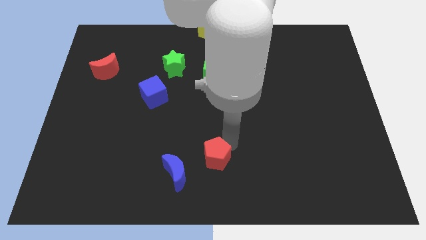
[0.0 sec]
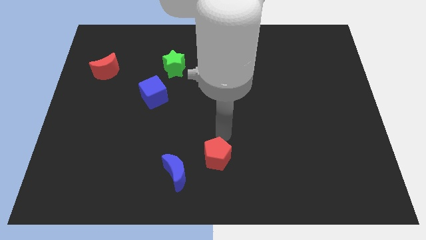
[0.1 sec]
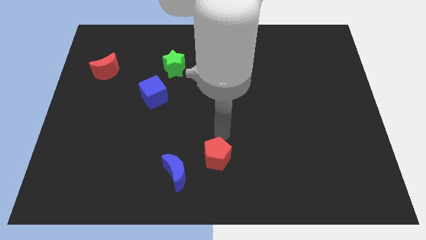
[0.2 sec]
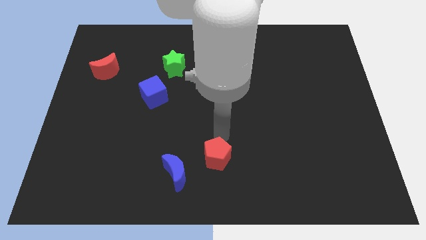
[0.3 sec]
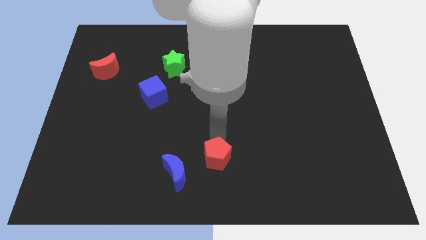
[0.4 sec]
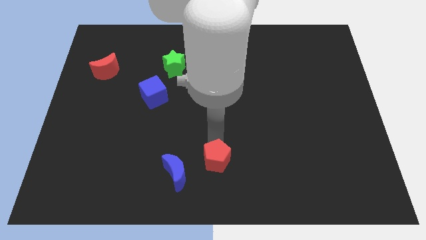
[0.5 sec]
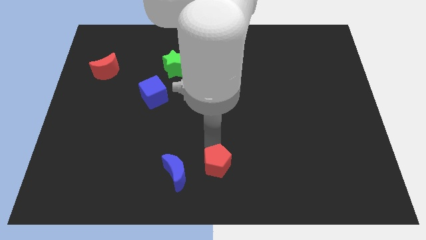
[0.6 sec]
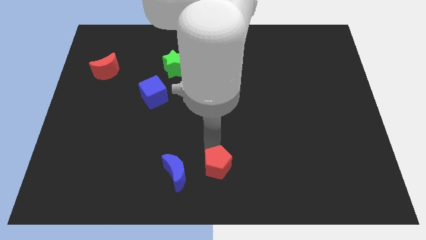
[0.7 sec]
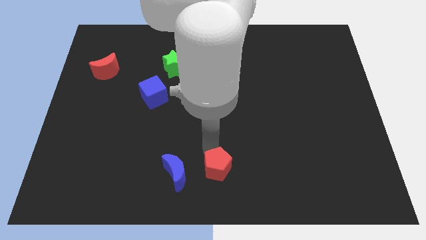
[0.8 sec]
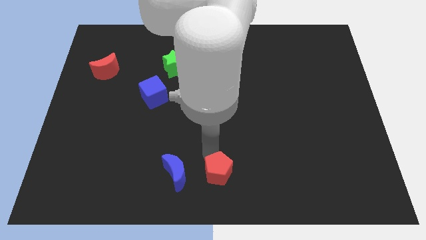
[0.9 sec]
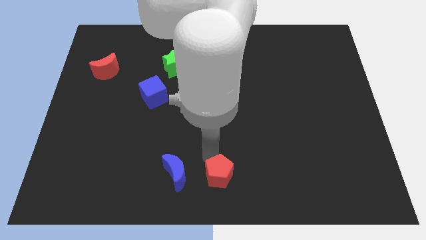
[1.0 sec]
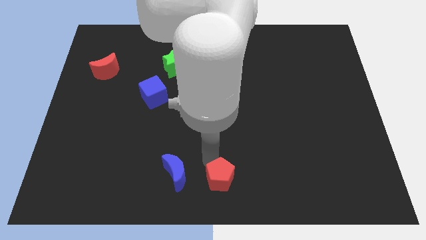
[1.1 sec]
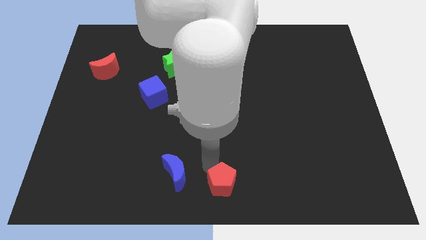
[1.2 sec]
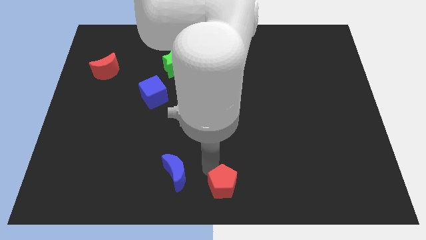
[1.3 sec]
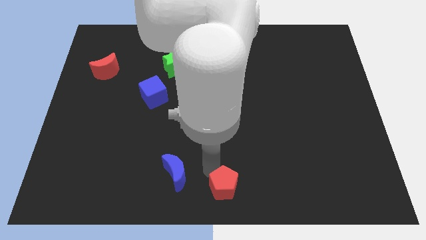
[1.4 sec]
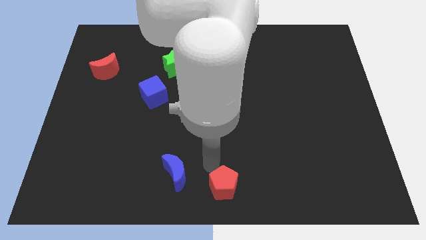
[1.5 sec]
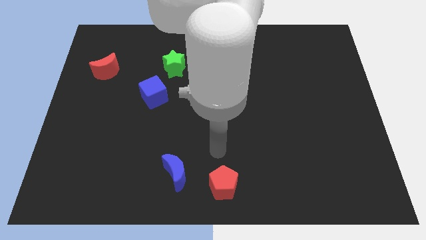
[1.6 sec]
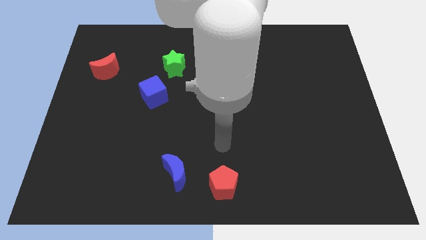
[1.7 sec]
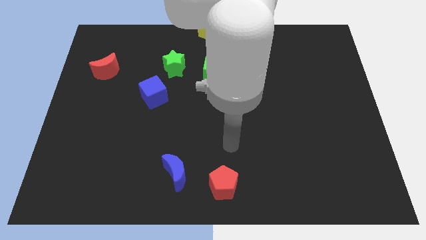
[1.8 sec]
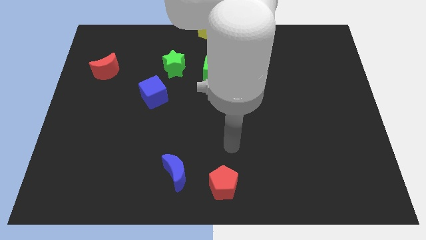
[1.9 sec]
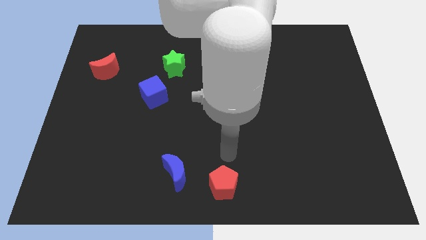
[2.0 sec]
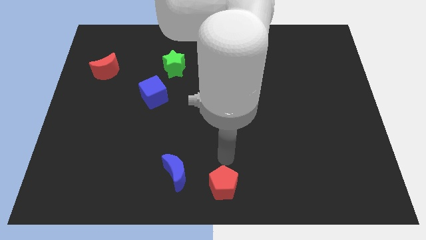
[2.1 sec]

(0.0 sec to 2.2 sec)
place the red pentagon at the bottom centre of the board

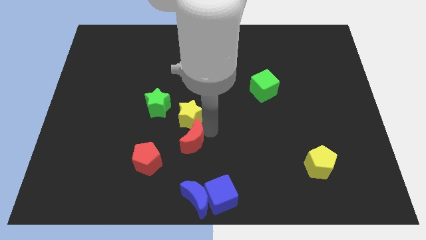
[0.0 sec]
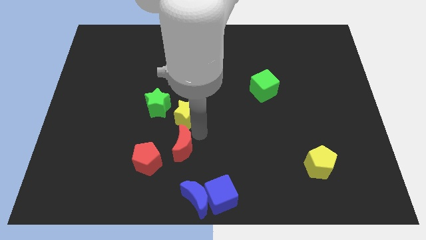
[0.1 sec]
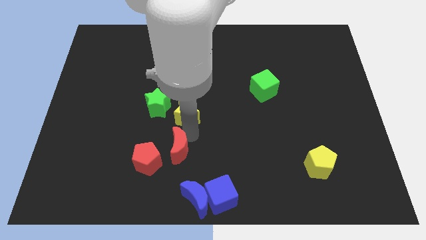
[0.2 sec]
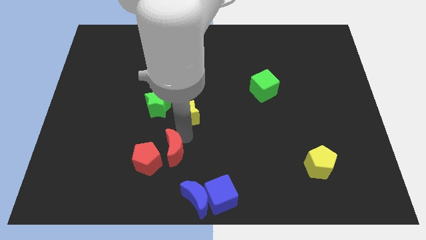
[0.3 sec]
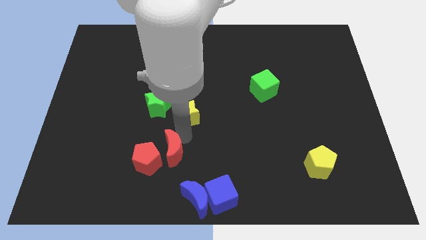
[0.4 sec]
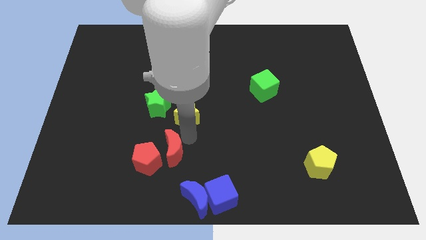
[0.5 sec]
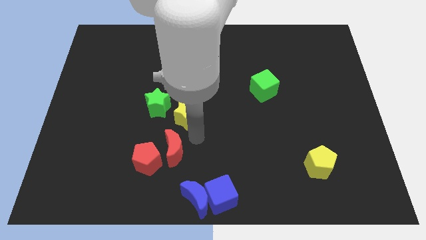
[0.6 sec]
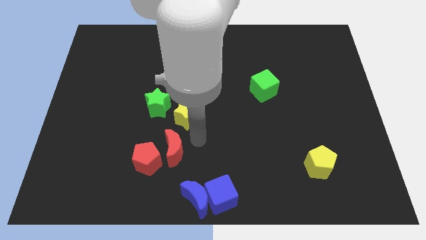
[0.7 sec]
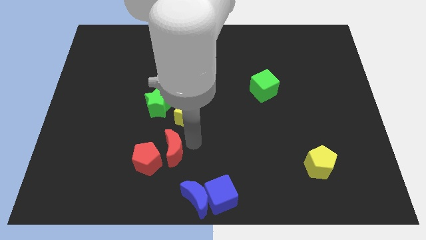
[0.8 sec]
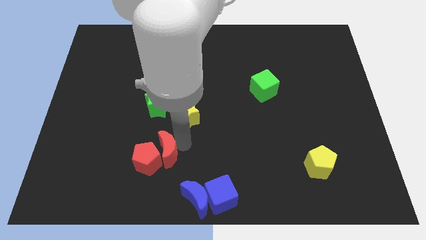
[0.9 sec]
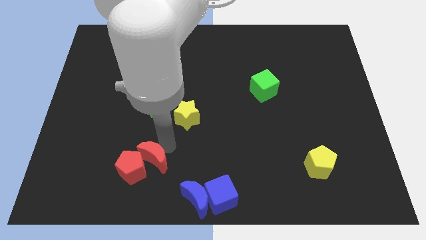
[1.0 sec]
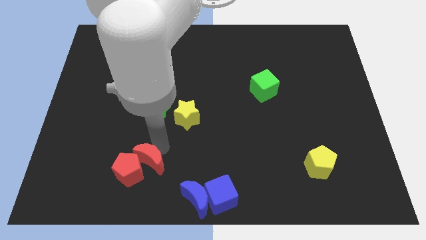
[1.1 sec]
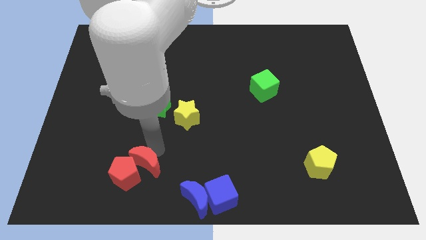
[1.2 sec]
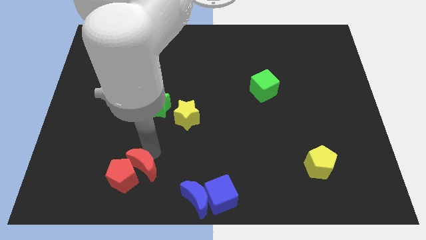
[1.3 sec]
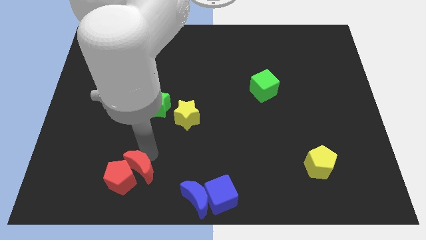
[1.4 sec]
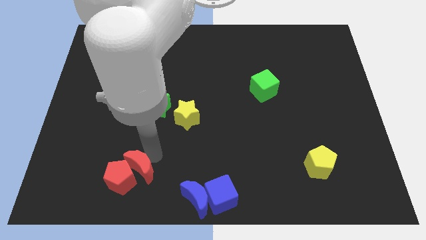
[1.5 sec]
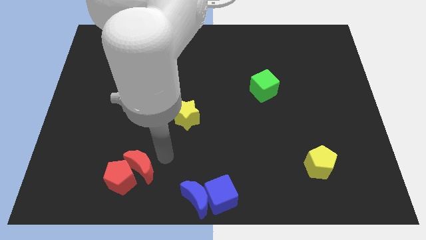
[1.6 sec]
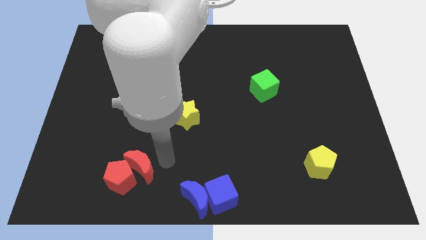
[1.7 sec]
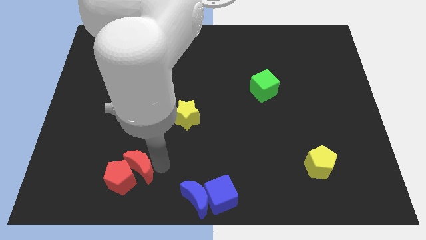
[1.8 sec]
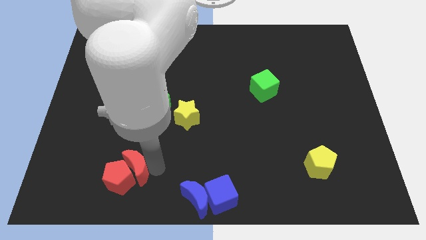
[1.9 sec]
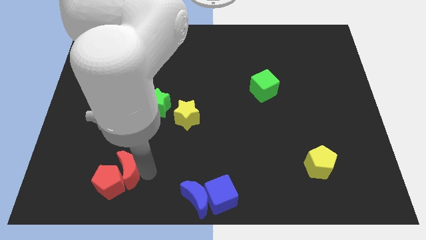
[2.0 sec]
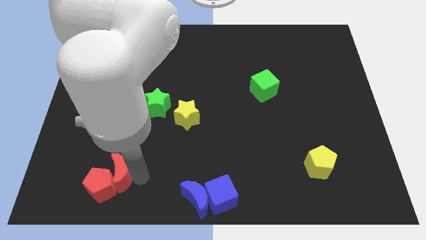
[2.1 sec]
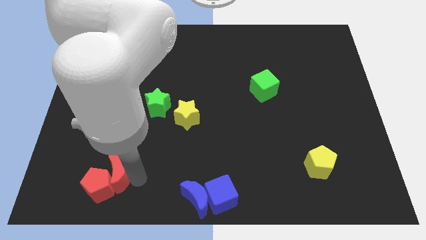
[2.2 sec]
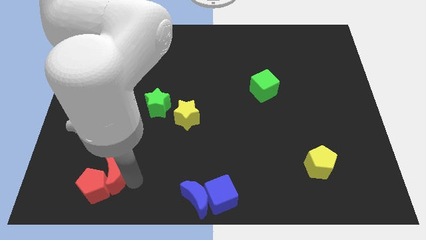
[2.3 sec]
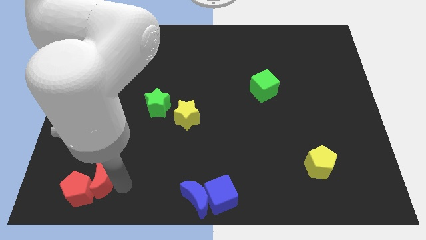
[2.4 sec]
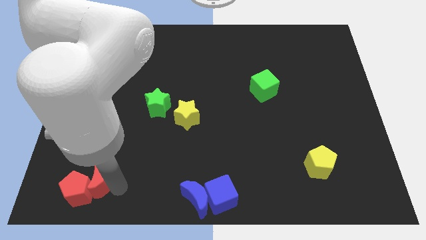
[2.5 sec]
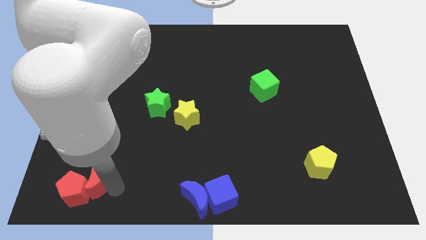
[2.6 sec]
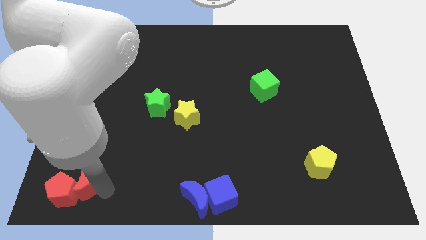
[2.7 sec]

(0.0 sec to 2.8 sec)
move red crescent into red pentagon

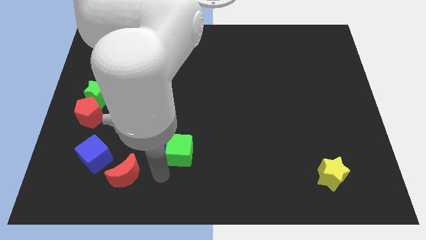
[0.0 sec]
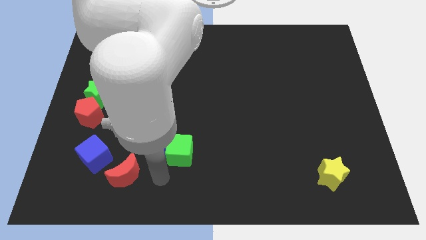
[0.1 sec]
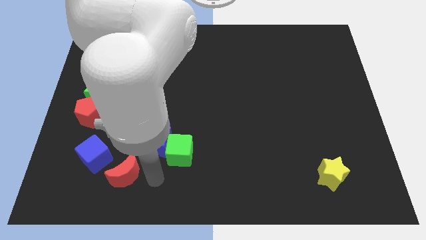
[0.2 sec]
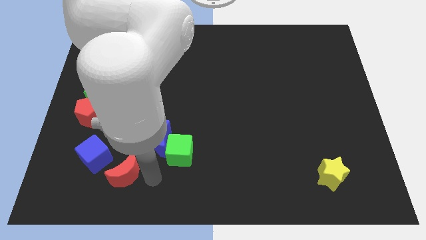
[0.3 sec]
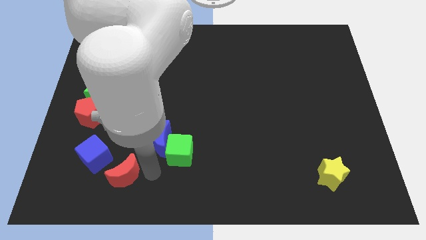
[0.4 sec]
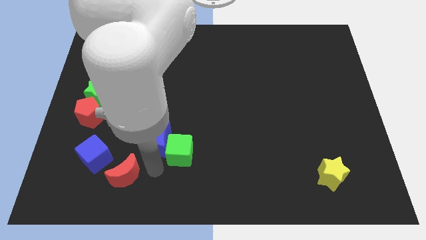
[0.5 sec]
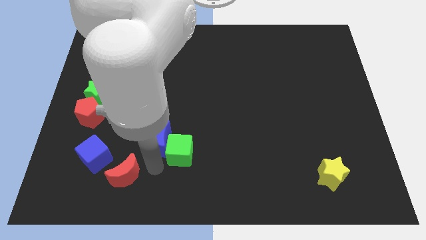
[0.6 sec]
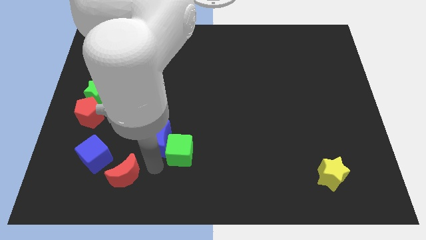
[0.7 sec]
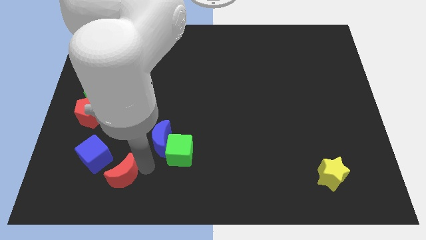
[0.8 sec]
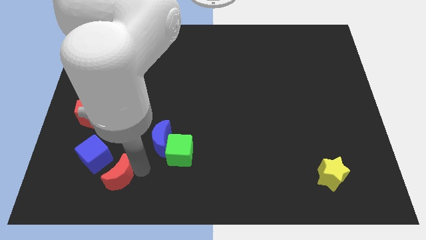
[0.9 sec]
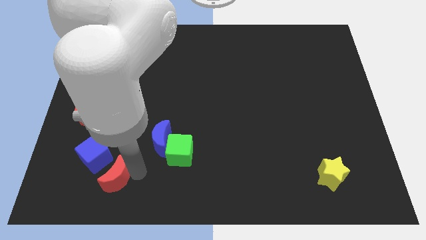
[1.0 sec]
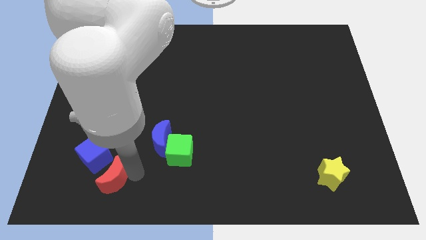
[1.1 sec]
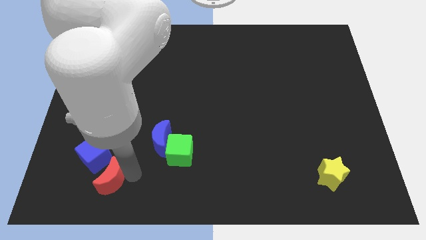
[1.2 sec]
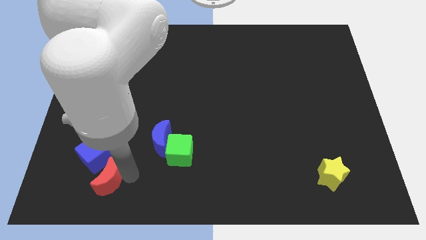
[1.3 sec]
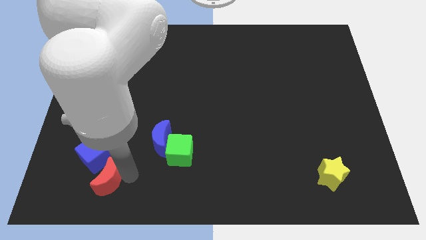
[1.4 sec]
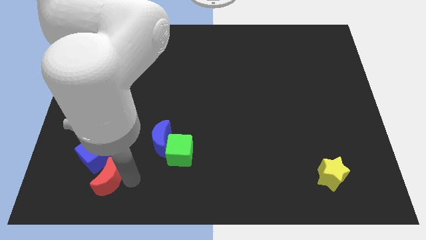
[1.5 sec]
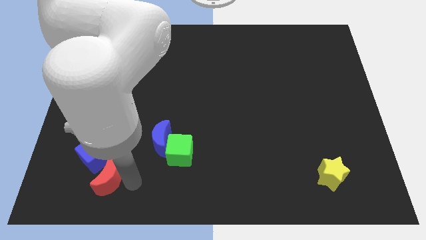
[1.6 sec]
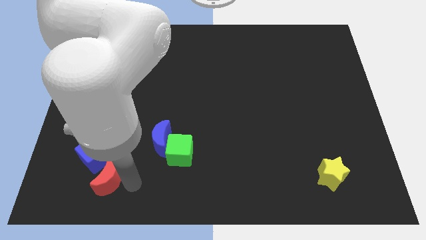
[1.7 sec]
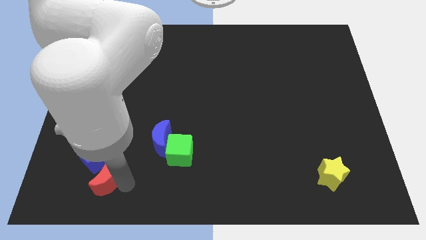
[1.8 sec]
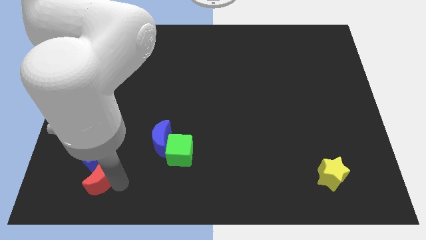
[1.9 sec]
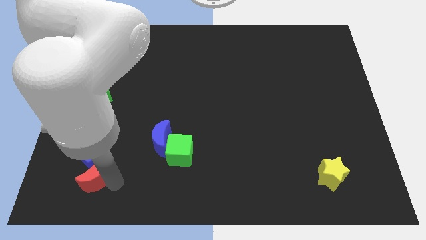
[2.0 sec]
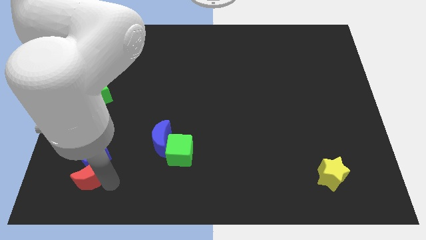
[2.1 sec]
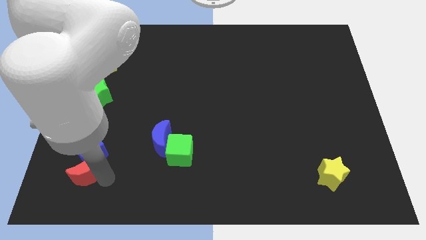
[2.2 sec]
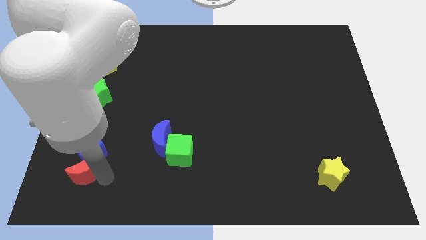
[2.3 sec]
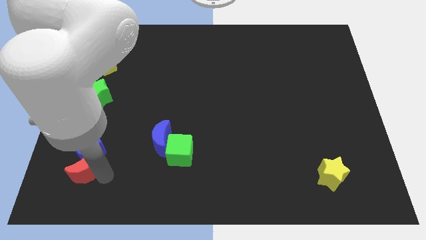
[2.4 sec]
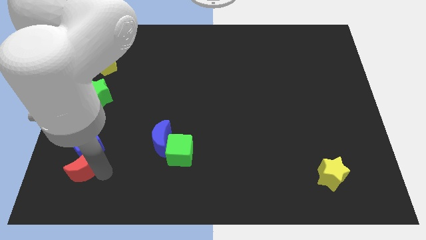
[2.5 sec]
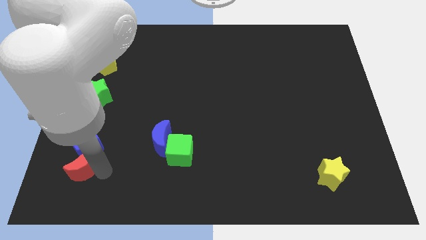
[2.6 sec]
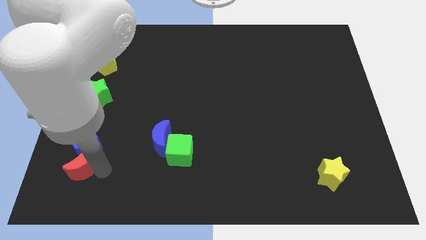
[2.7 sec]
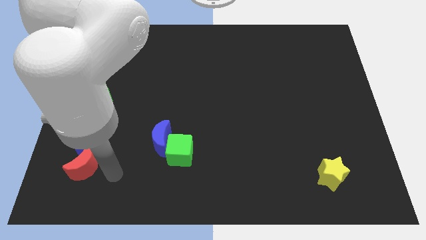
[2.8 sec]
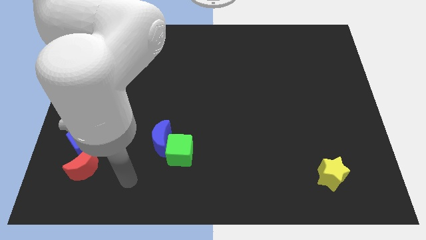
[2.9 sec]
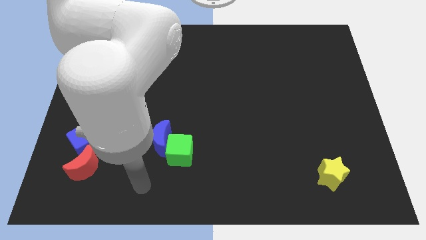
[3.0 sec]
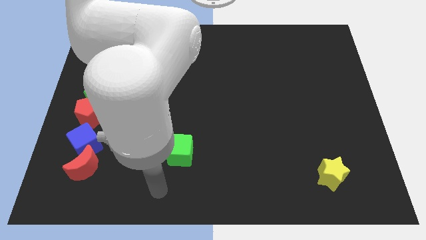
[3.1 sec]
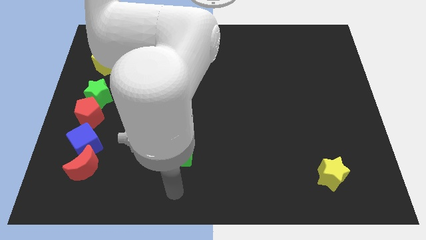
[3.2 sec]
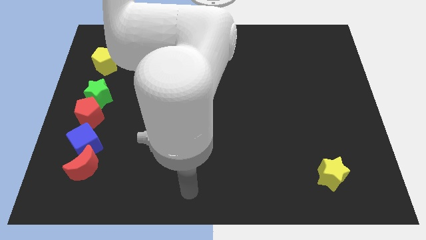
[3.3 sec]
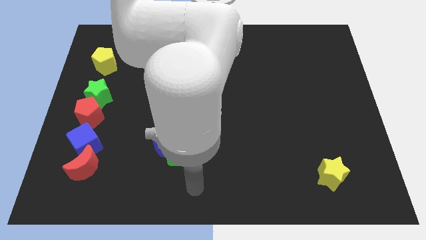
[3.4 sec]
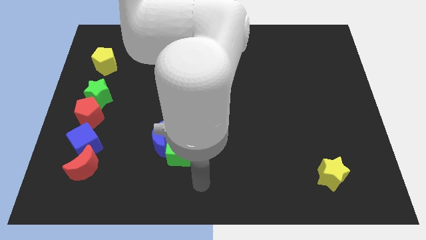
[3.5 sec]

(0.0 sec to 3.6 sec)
push the red moon into the blue cube

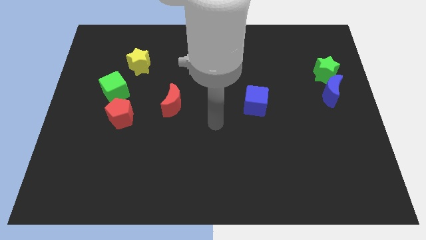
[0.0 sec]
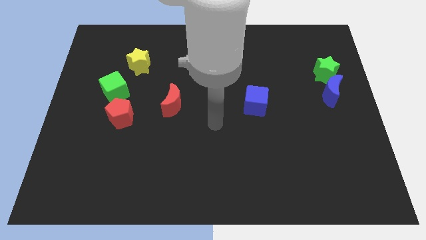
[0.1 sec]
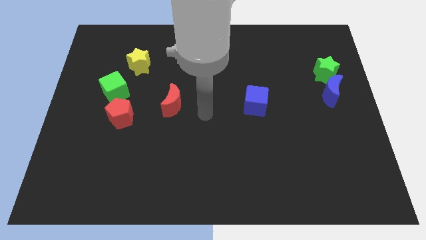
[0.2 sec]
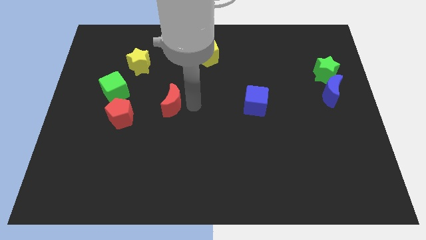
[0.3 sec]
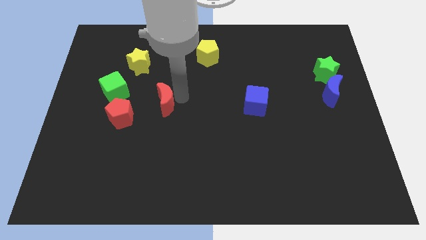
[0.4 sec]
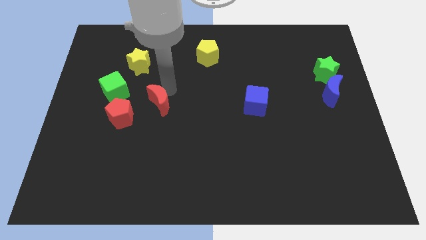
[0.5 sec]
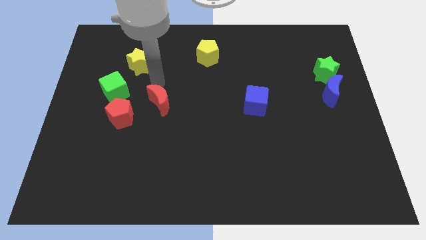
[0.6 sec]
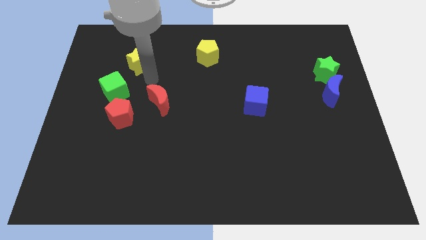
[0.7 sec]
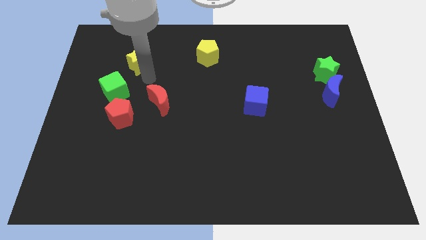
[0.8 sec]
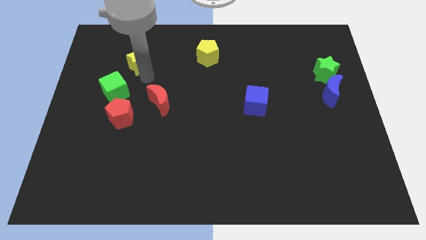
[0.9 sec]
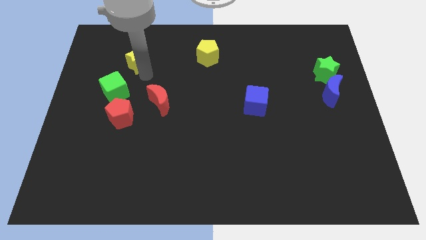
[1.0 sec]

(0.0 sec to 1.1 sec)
move the red moon slightly to the left
